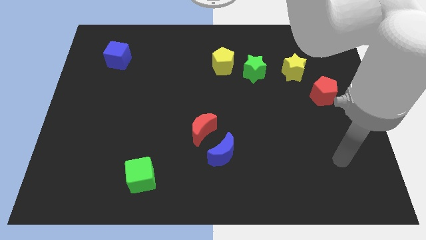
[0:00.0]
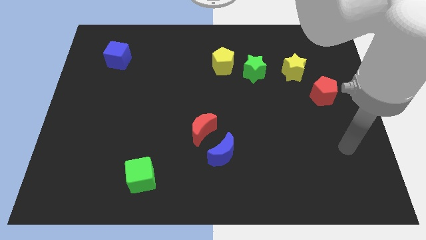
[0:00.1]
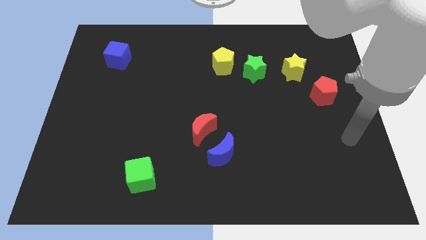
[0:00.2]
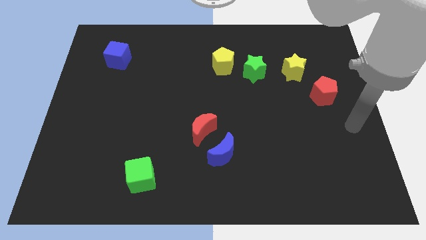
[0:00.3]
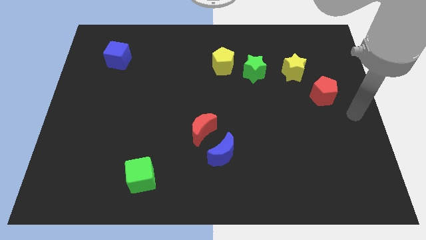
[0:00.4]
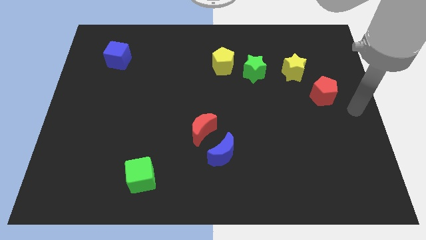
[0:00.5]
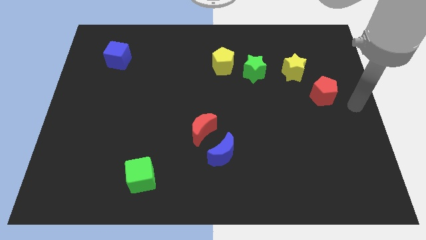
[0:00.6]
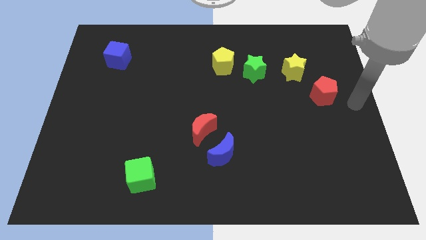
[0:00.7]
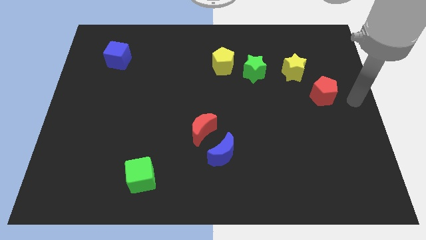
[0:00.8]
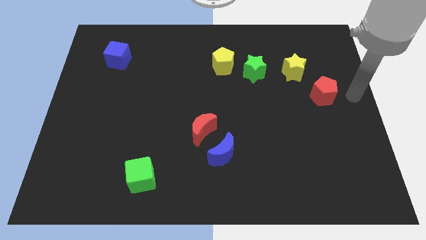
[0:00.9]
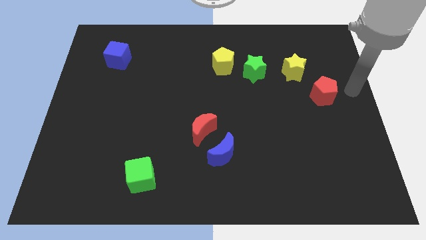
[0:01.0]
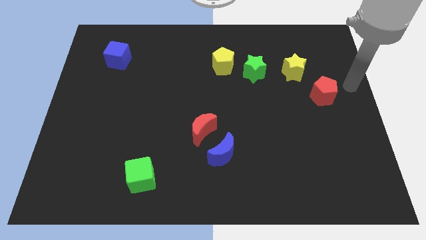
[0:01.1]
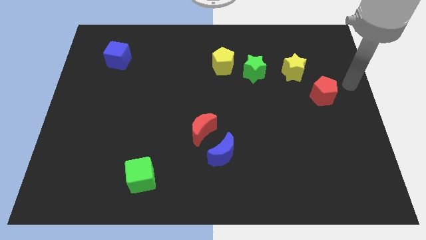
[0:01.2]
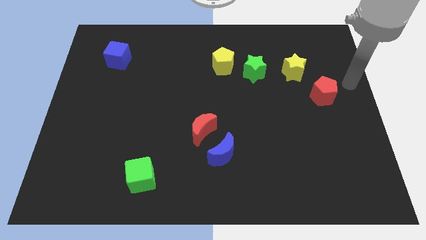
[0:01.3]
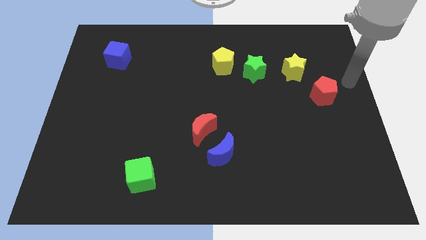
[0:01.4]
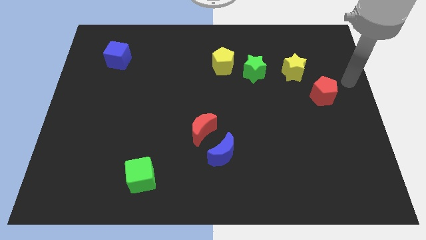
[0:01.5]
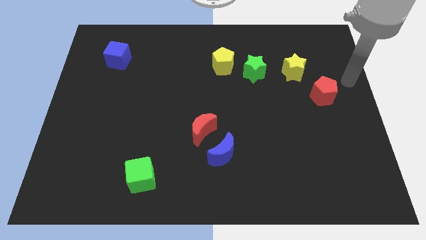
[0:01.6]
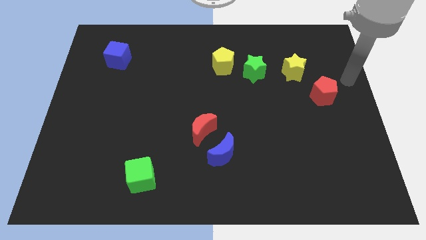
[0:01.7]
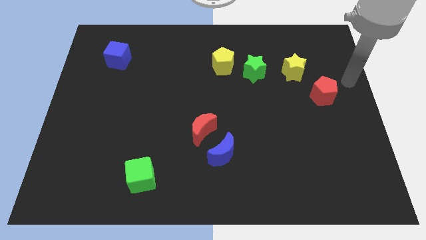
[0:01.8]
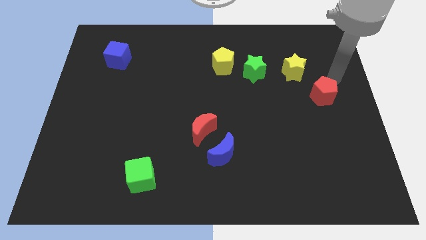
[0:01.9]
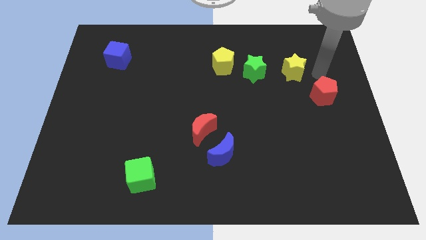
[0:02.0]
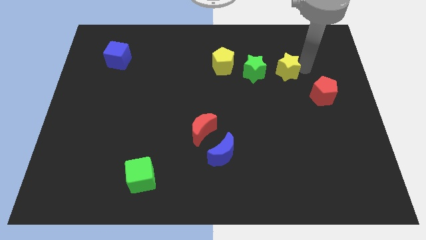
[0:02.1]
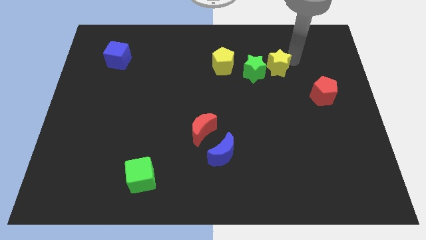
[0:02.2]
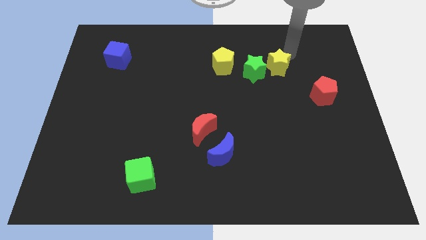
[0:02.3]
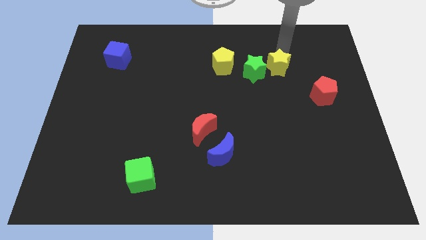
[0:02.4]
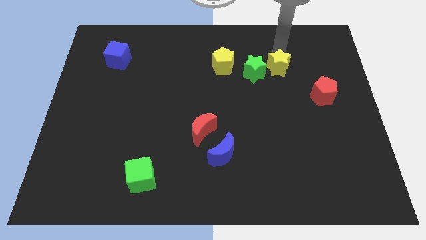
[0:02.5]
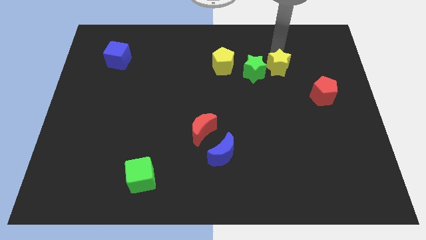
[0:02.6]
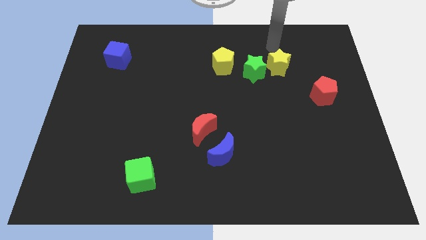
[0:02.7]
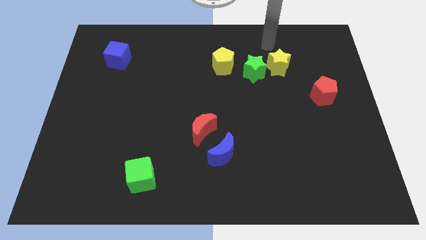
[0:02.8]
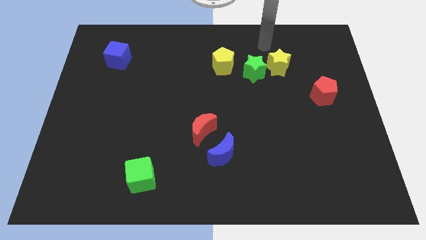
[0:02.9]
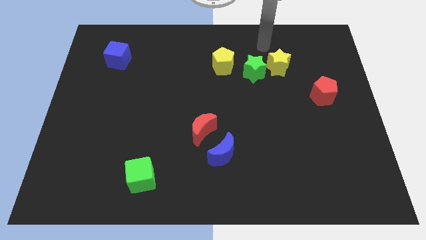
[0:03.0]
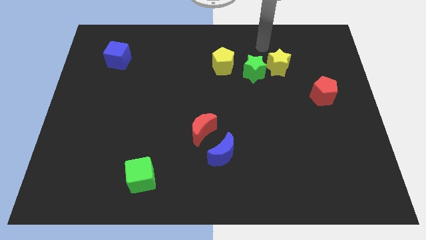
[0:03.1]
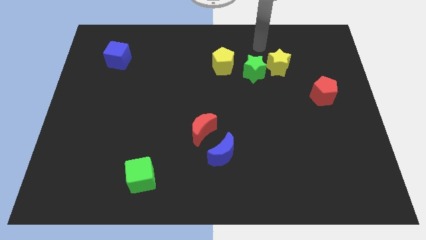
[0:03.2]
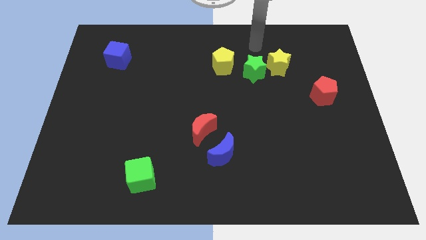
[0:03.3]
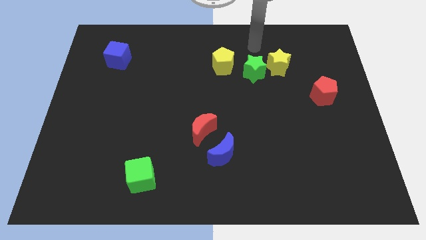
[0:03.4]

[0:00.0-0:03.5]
push the yellow star towards the green star

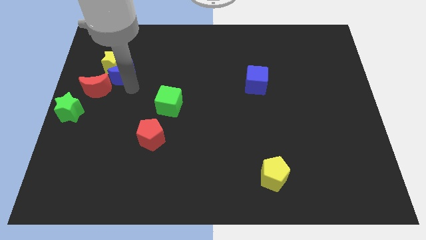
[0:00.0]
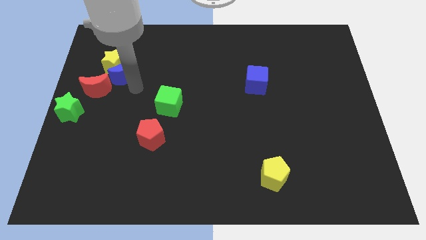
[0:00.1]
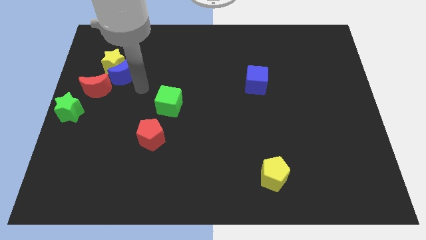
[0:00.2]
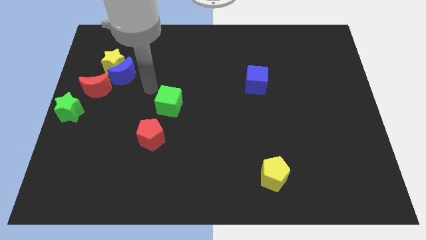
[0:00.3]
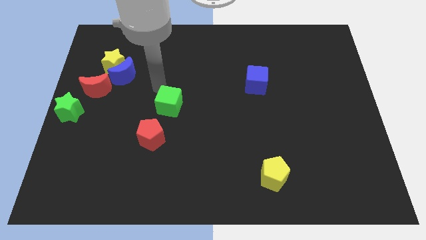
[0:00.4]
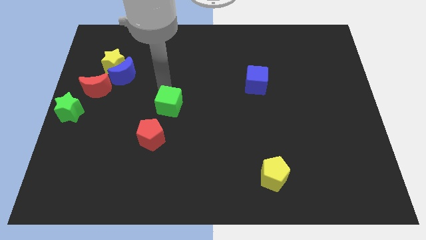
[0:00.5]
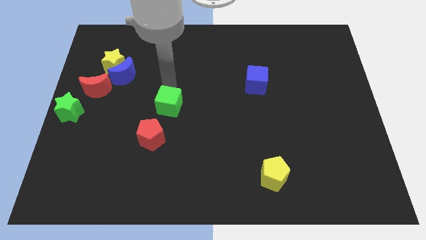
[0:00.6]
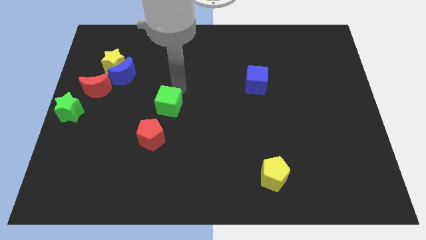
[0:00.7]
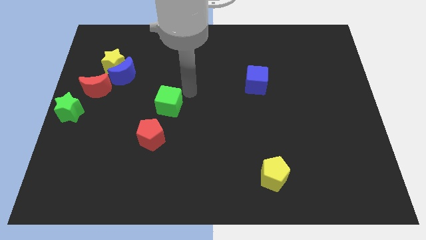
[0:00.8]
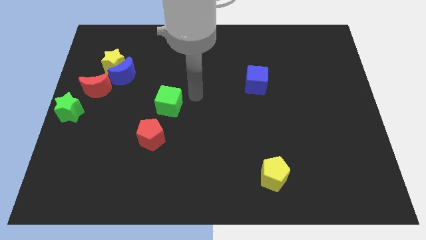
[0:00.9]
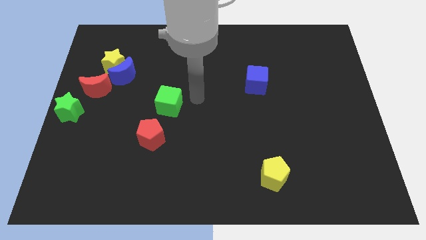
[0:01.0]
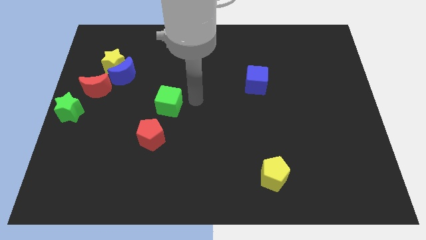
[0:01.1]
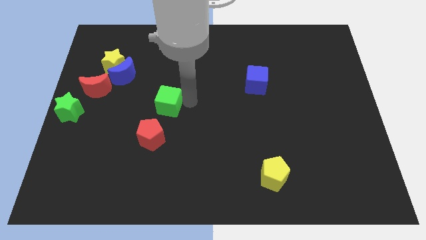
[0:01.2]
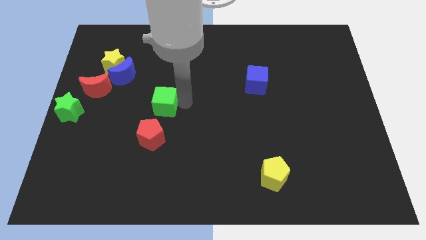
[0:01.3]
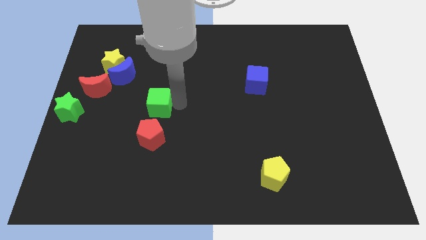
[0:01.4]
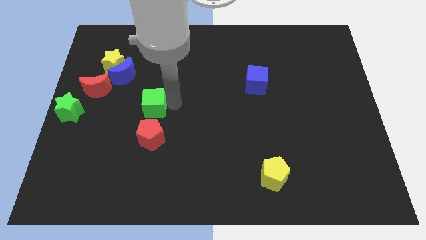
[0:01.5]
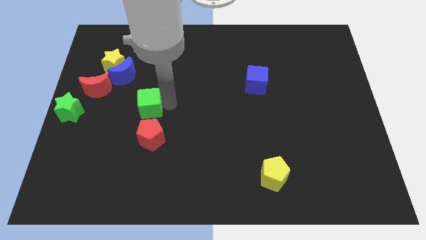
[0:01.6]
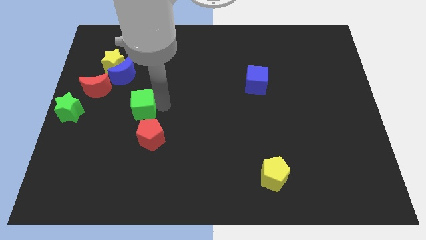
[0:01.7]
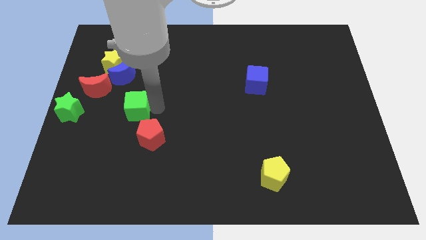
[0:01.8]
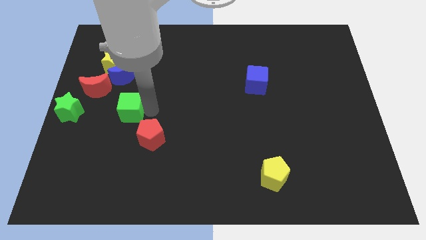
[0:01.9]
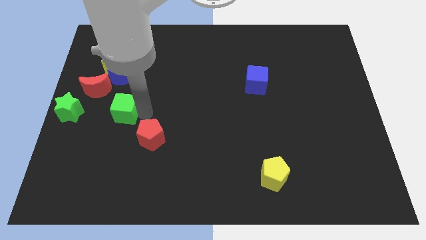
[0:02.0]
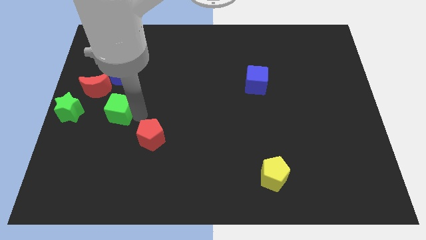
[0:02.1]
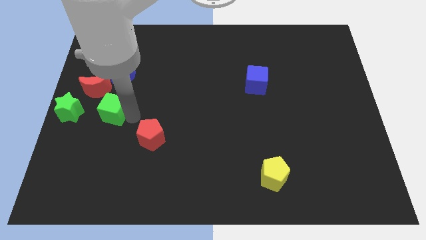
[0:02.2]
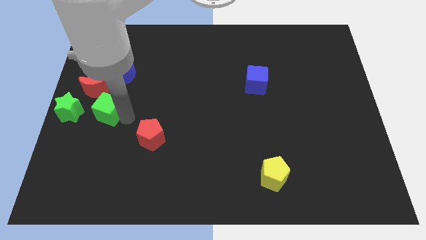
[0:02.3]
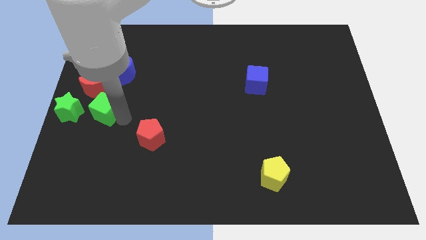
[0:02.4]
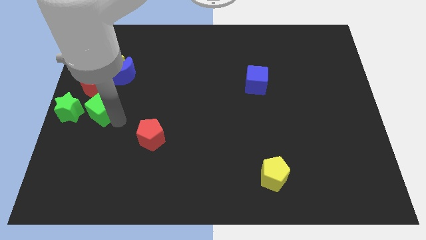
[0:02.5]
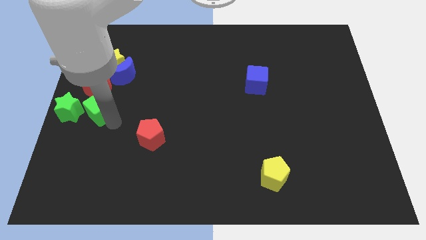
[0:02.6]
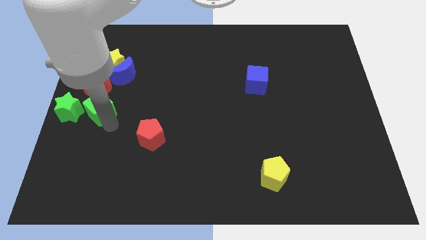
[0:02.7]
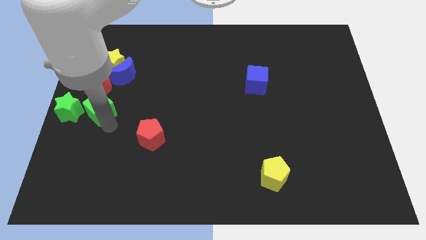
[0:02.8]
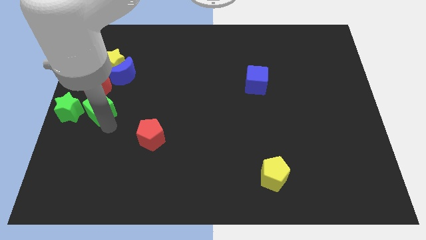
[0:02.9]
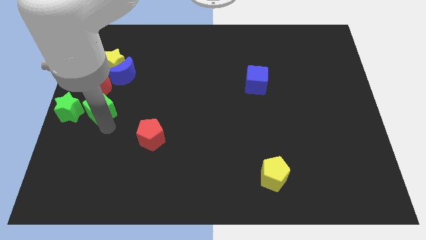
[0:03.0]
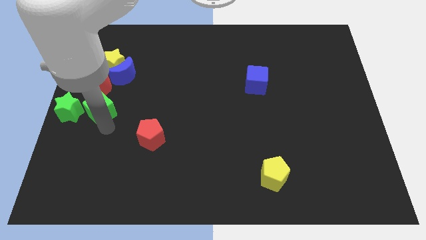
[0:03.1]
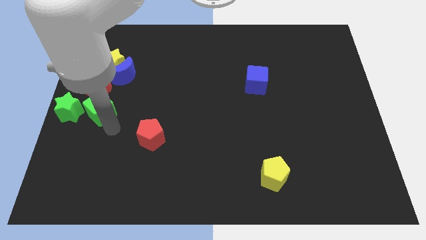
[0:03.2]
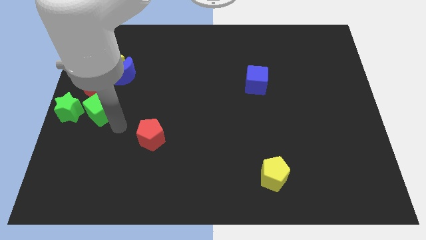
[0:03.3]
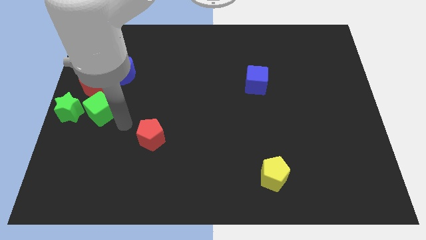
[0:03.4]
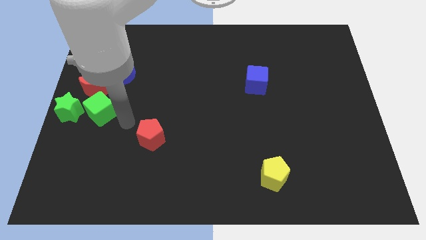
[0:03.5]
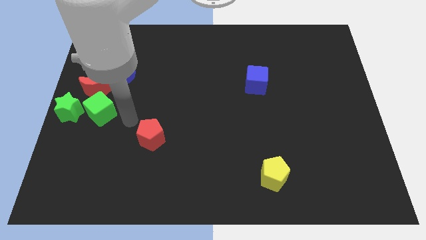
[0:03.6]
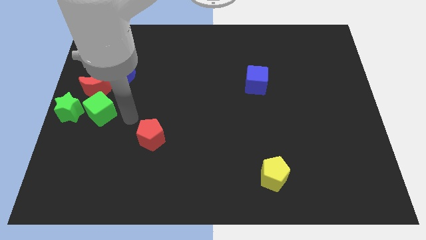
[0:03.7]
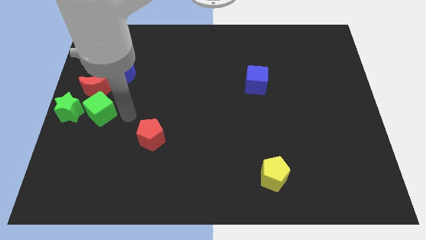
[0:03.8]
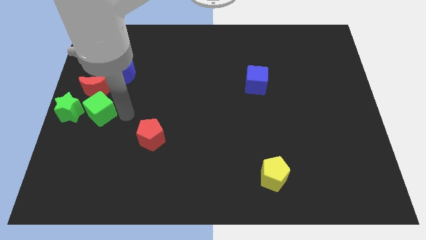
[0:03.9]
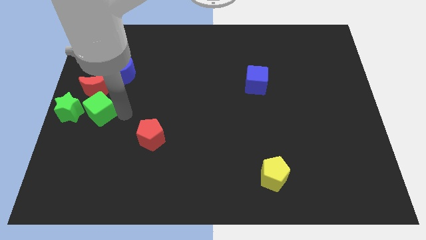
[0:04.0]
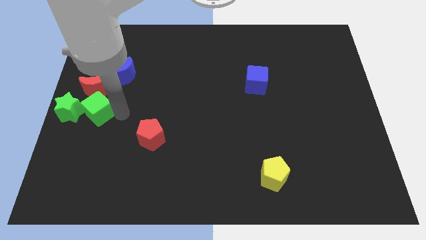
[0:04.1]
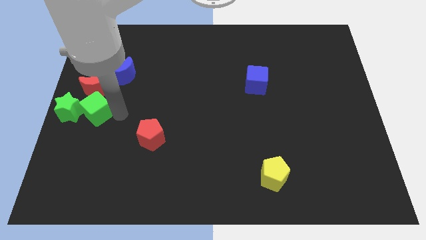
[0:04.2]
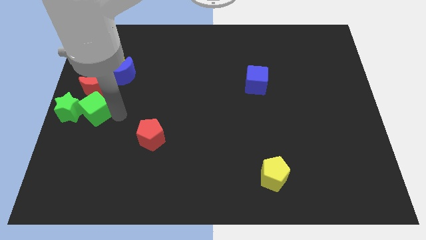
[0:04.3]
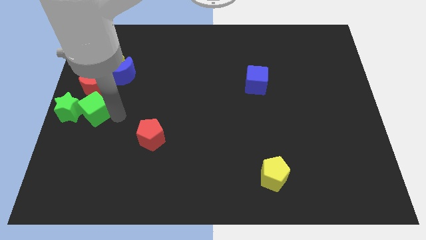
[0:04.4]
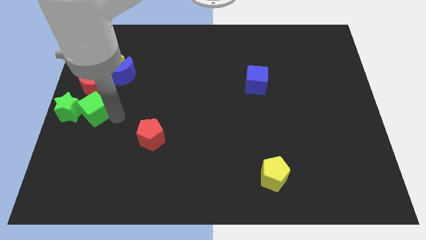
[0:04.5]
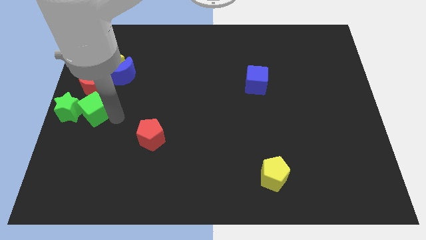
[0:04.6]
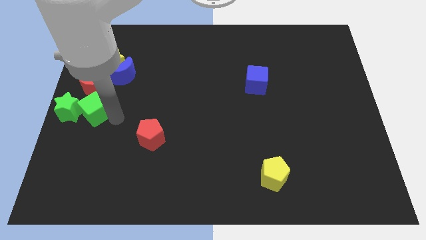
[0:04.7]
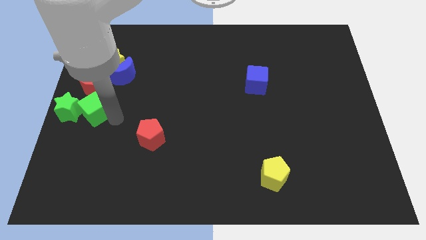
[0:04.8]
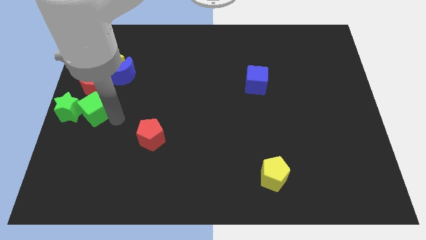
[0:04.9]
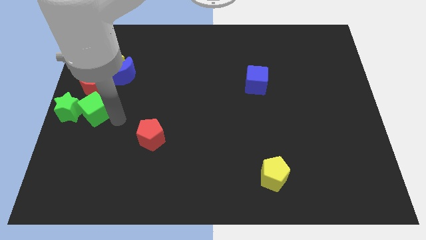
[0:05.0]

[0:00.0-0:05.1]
move the green cube into the right of the green star

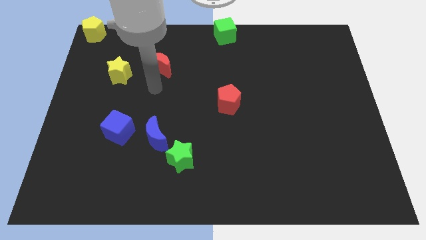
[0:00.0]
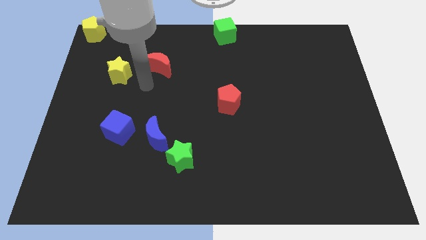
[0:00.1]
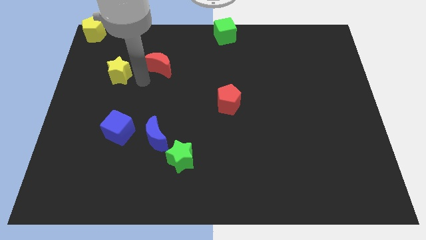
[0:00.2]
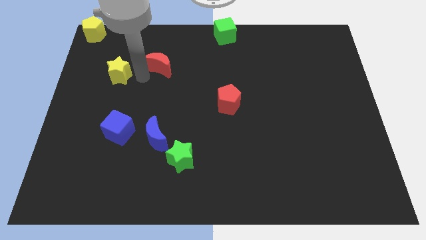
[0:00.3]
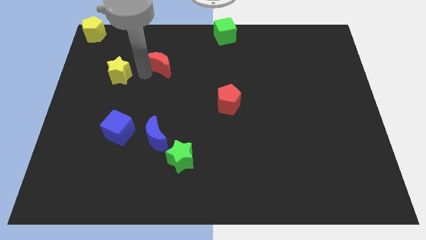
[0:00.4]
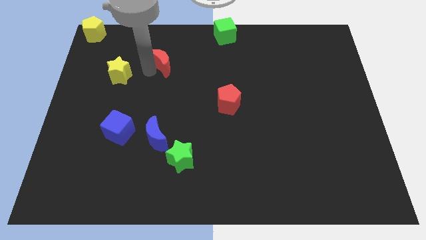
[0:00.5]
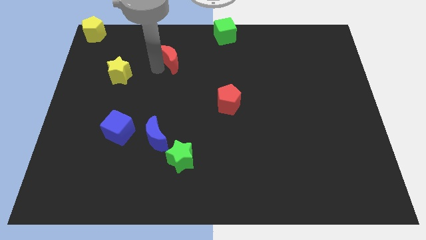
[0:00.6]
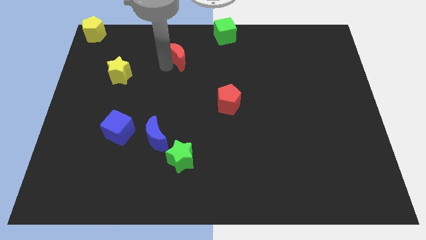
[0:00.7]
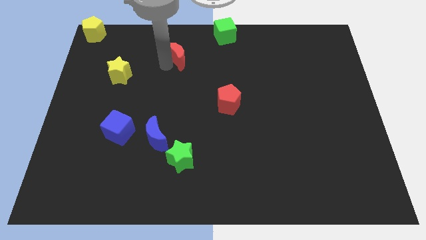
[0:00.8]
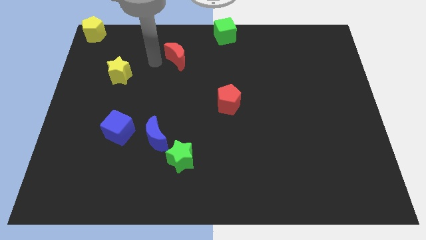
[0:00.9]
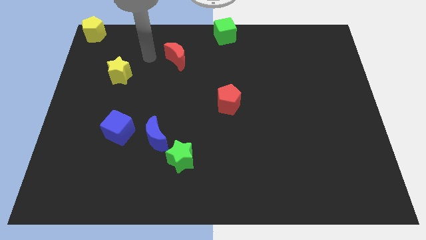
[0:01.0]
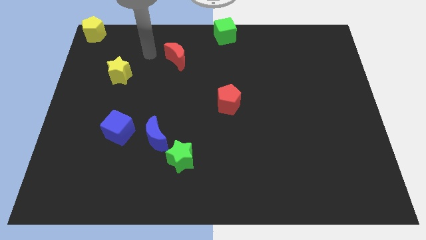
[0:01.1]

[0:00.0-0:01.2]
push the red crescent up slightly
